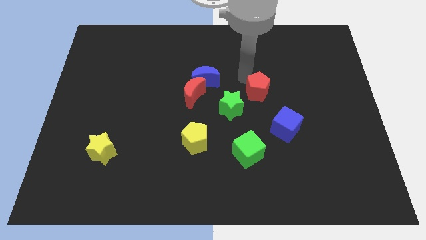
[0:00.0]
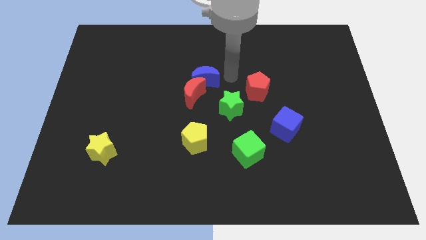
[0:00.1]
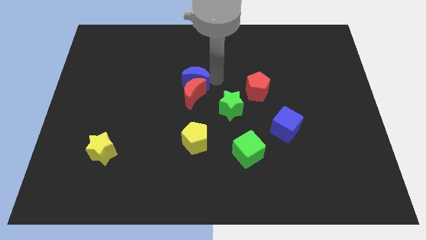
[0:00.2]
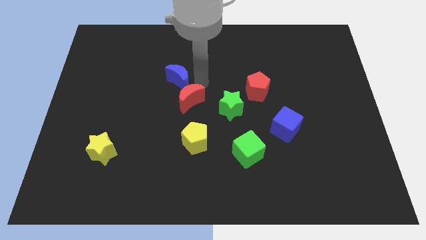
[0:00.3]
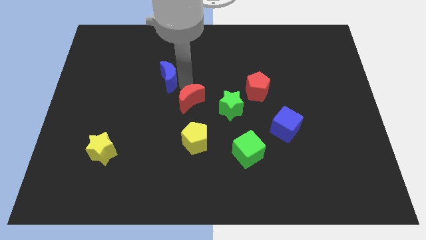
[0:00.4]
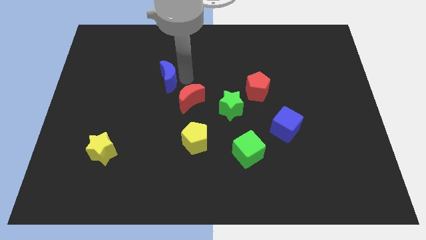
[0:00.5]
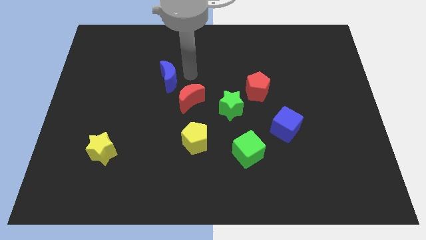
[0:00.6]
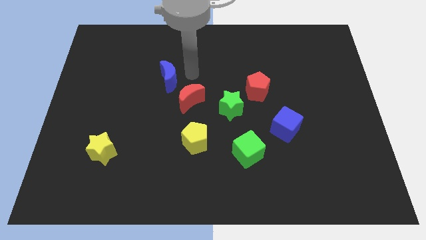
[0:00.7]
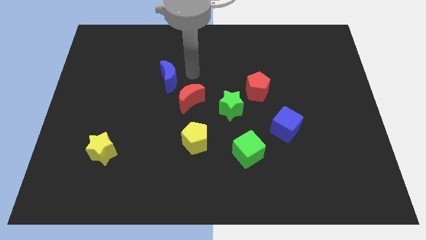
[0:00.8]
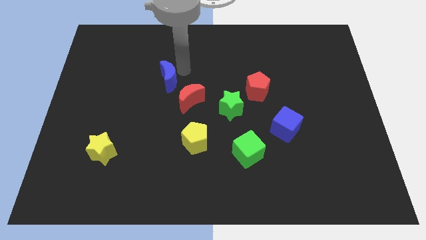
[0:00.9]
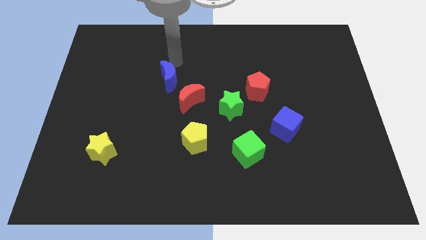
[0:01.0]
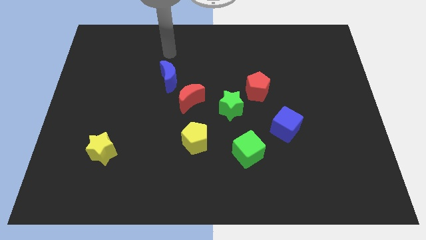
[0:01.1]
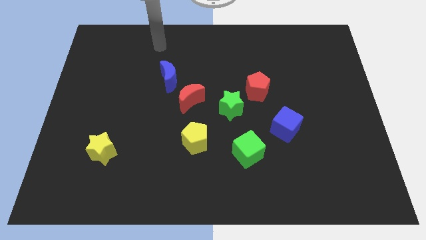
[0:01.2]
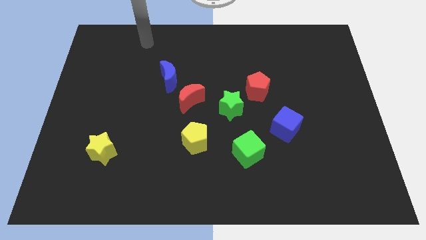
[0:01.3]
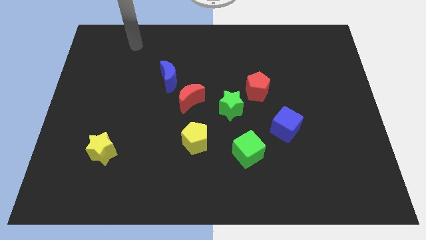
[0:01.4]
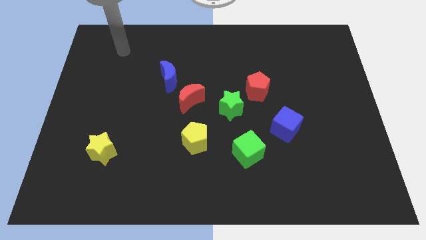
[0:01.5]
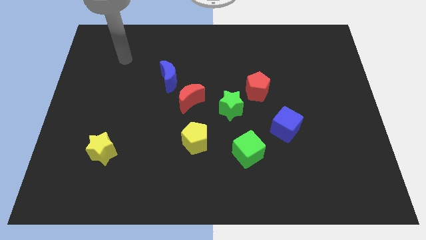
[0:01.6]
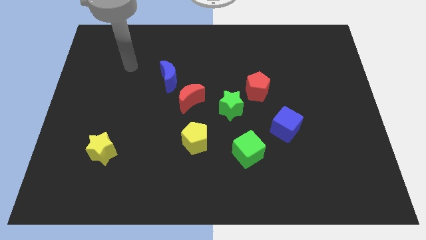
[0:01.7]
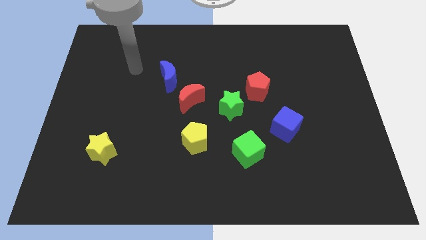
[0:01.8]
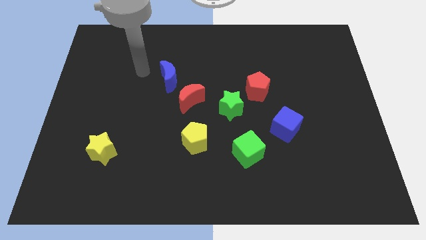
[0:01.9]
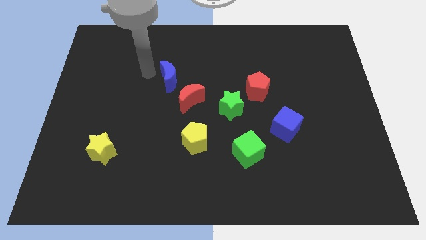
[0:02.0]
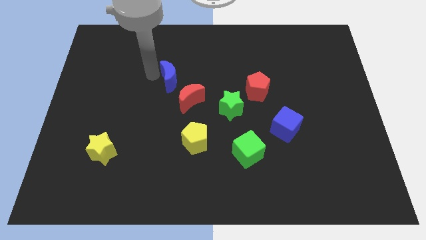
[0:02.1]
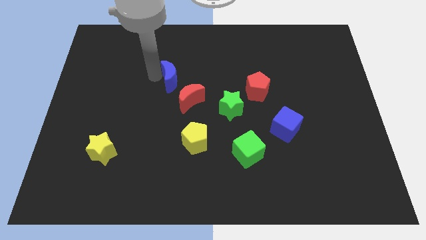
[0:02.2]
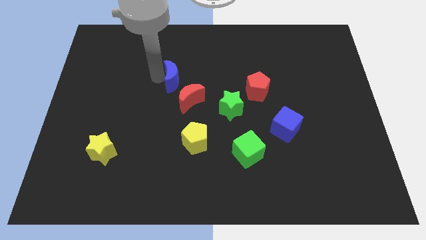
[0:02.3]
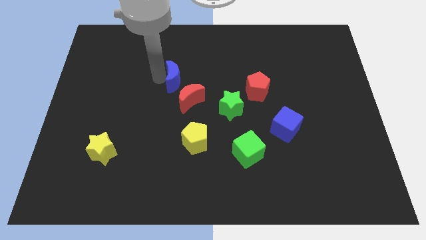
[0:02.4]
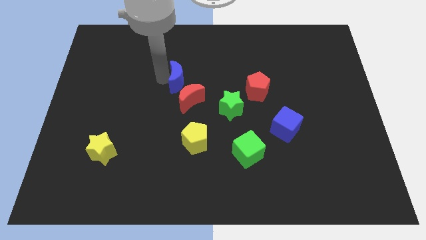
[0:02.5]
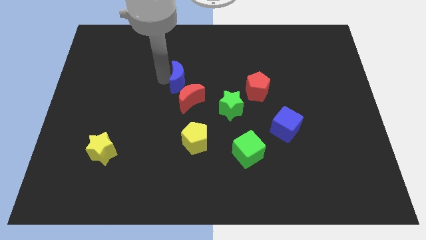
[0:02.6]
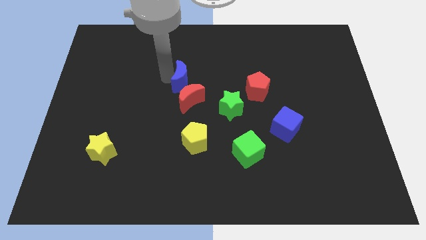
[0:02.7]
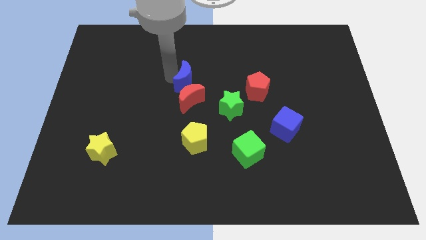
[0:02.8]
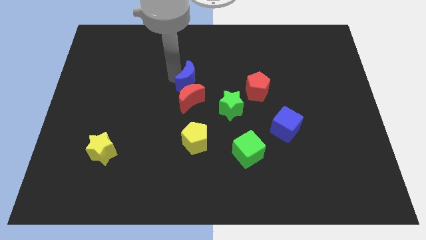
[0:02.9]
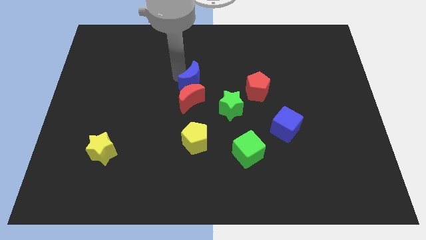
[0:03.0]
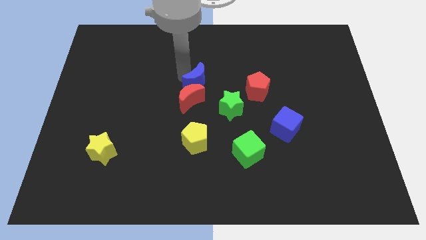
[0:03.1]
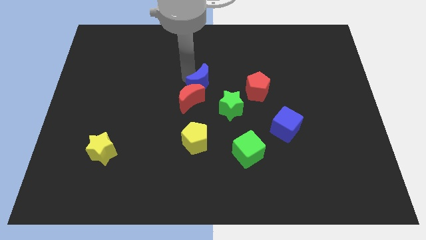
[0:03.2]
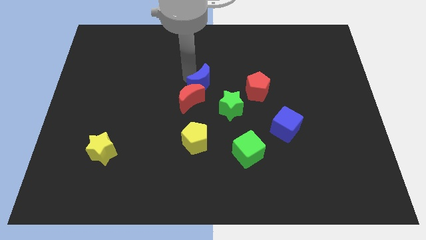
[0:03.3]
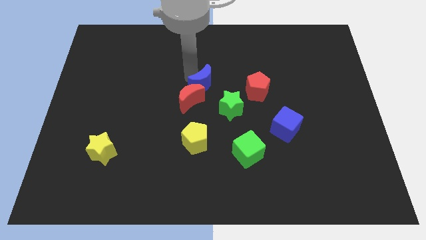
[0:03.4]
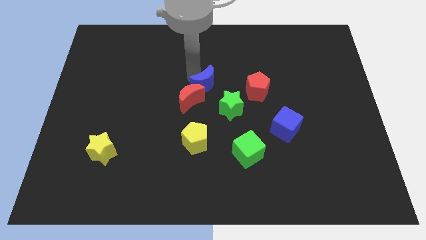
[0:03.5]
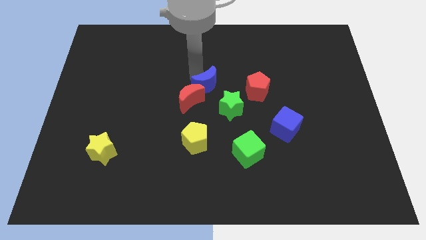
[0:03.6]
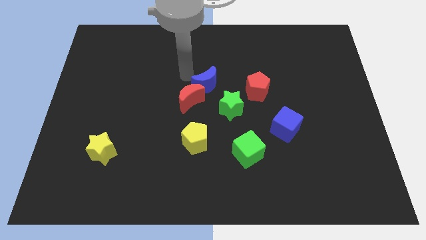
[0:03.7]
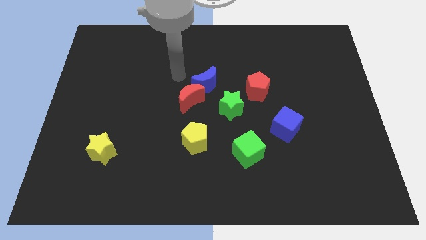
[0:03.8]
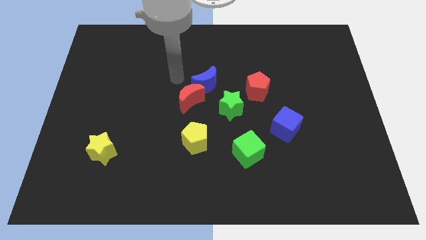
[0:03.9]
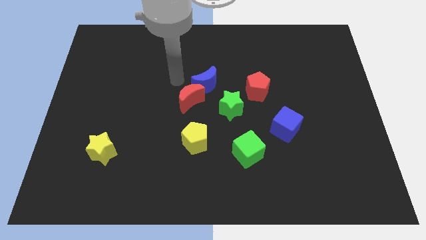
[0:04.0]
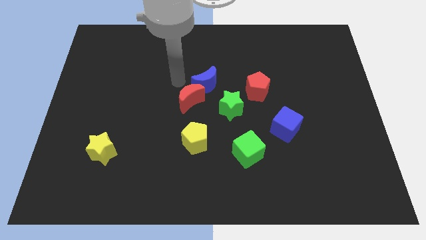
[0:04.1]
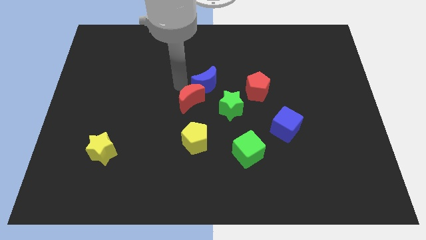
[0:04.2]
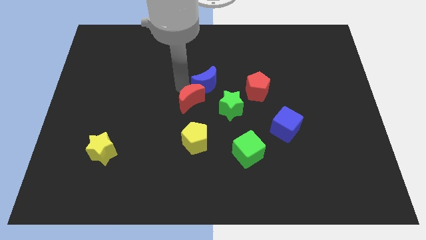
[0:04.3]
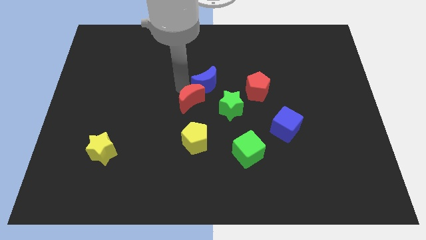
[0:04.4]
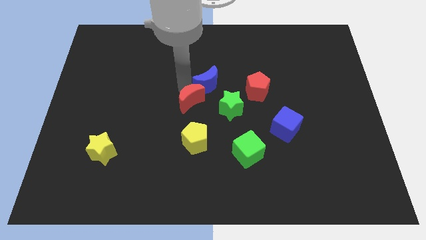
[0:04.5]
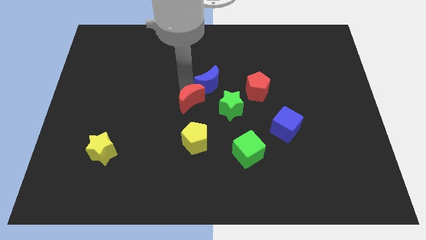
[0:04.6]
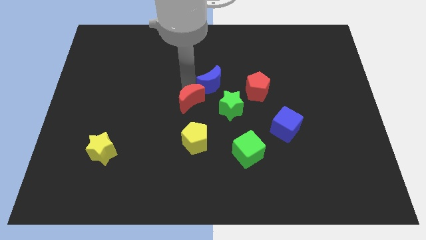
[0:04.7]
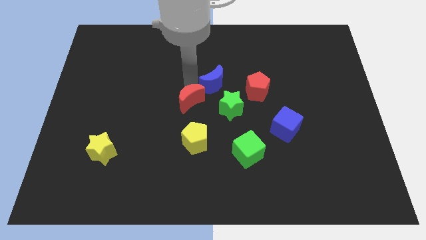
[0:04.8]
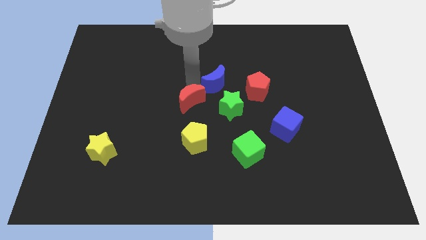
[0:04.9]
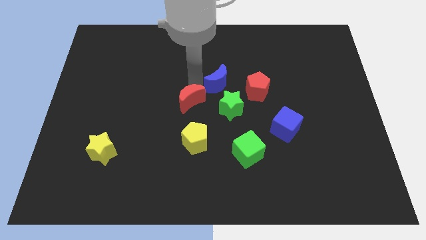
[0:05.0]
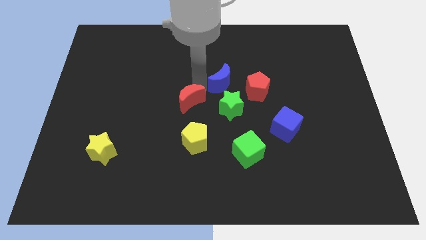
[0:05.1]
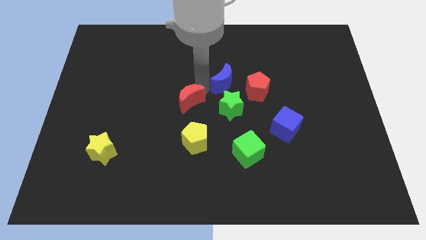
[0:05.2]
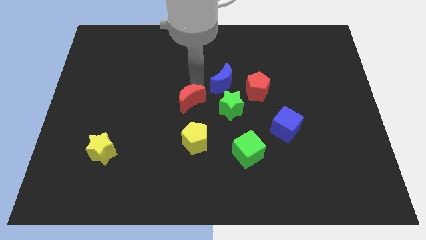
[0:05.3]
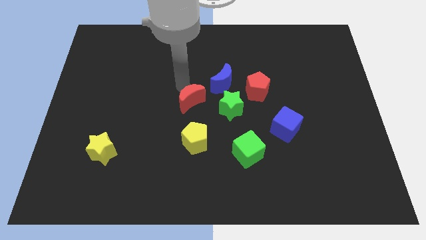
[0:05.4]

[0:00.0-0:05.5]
slide the blue moon to the top of the green star

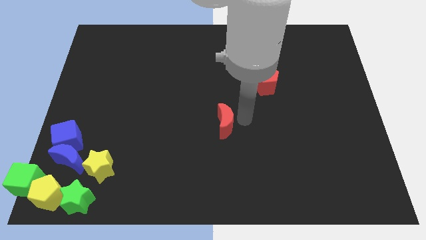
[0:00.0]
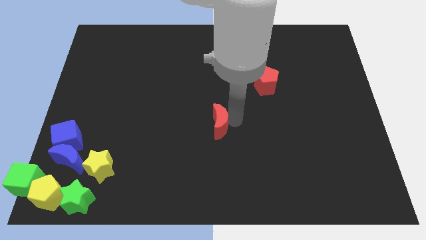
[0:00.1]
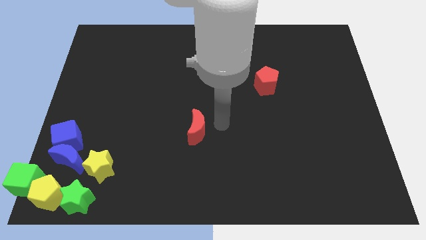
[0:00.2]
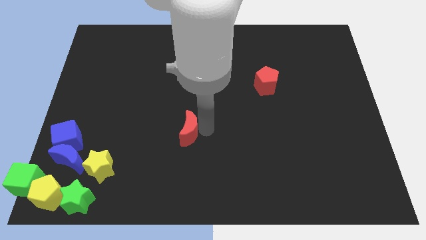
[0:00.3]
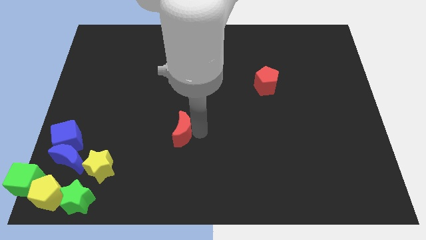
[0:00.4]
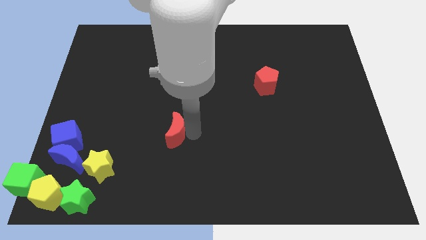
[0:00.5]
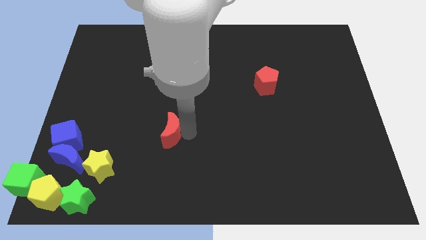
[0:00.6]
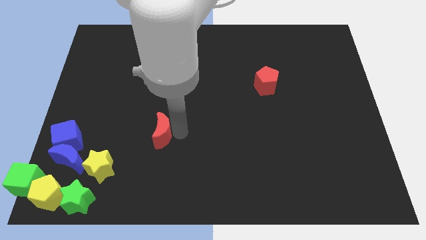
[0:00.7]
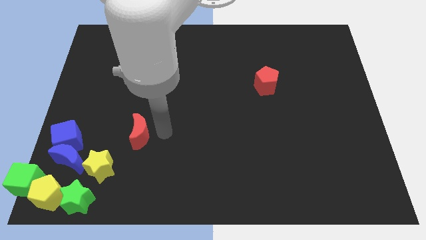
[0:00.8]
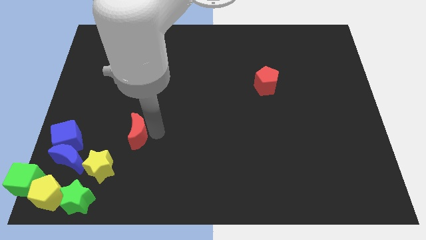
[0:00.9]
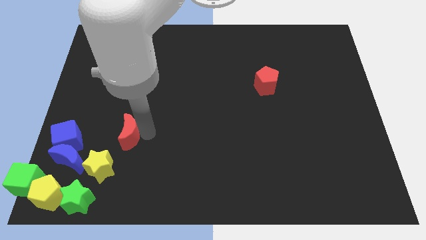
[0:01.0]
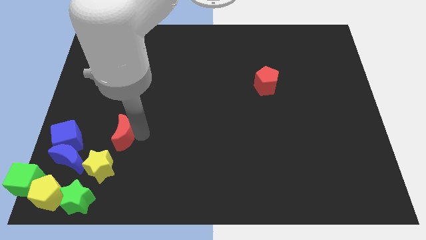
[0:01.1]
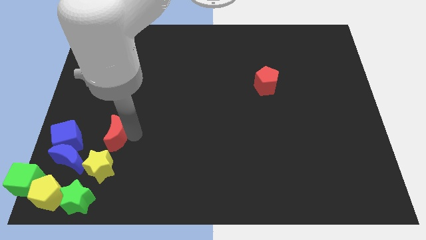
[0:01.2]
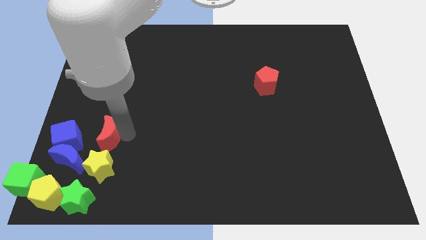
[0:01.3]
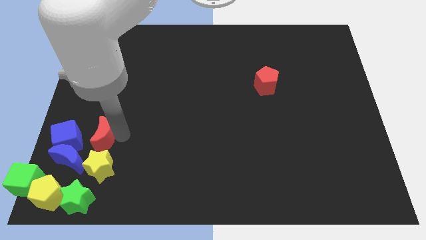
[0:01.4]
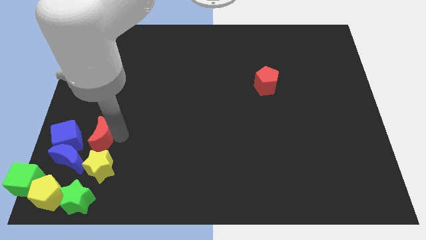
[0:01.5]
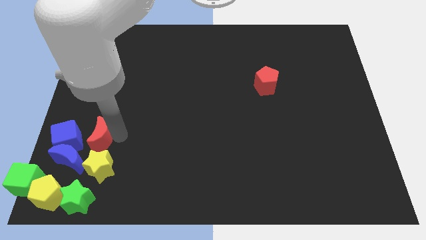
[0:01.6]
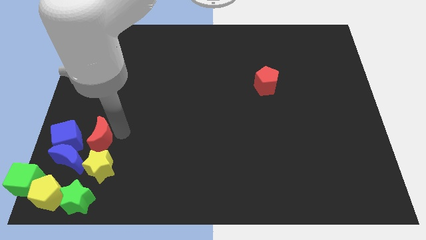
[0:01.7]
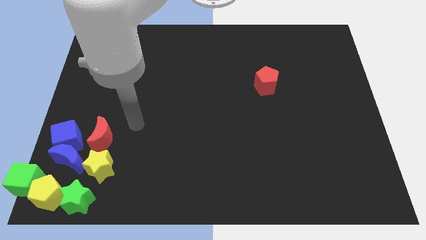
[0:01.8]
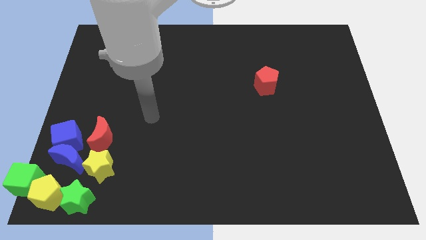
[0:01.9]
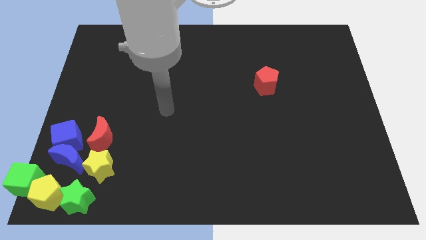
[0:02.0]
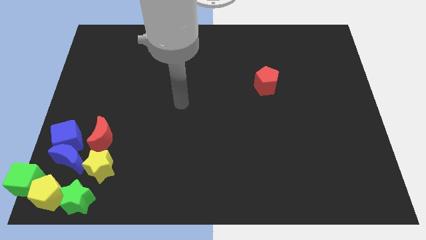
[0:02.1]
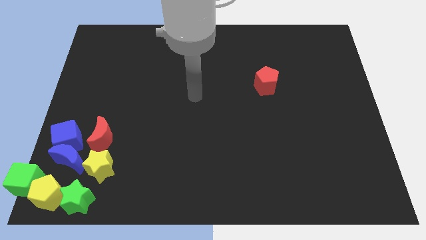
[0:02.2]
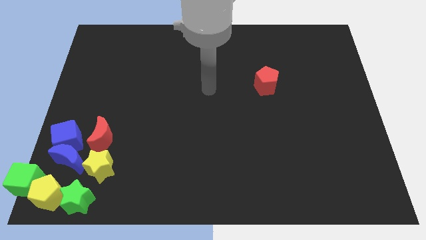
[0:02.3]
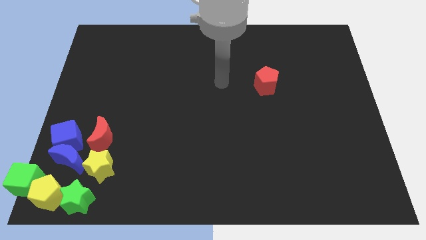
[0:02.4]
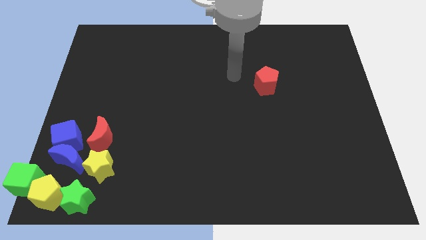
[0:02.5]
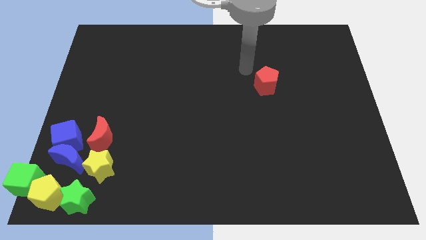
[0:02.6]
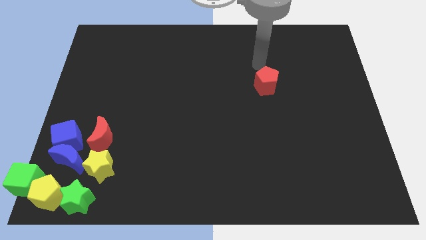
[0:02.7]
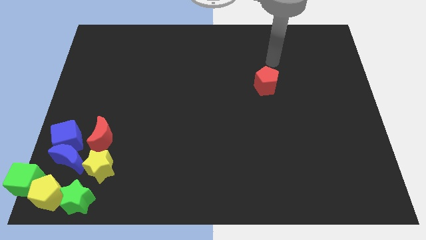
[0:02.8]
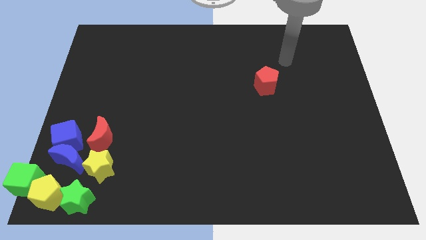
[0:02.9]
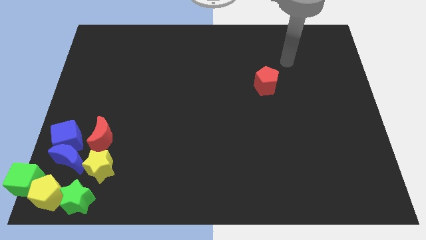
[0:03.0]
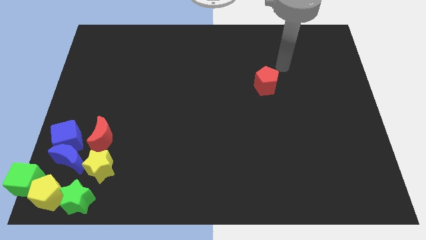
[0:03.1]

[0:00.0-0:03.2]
place the red crescent at the top side of the yellow star

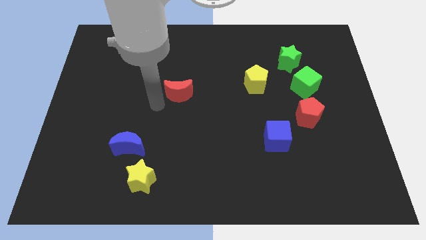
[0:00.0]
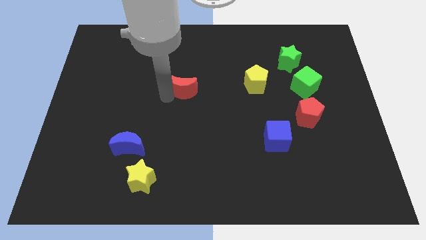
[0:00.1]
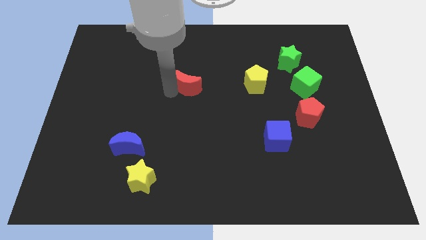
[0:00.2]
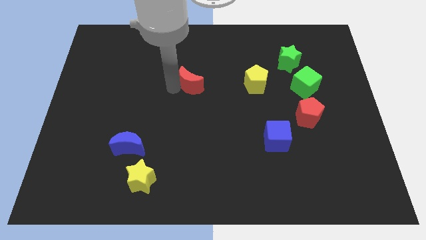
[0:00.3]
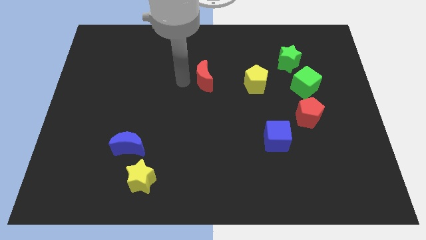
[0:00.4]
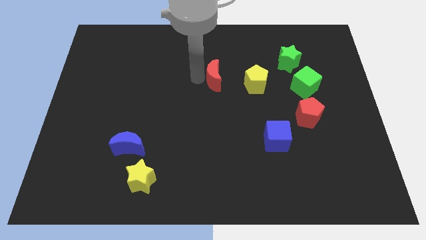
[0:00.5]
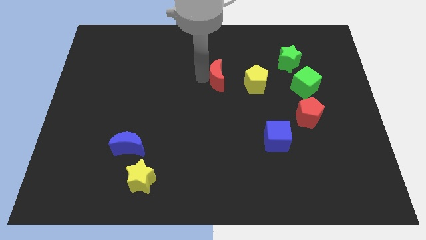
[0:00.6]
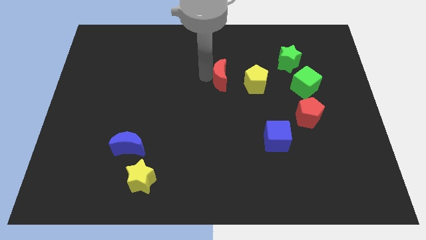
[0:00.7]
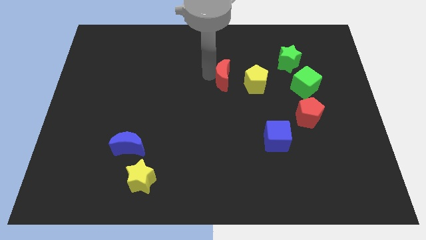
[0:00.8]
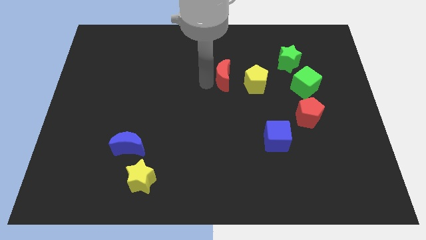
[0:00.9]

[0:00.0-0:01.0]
push the red moon left to the yellow pentagon
